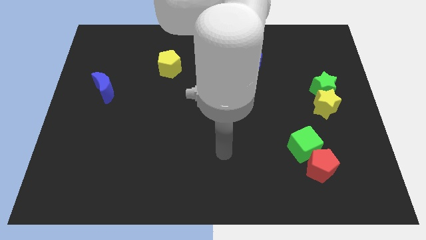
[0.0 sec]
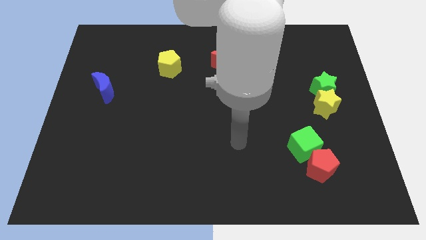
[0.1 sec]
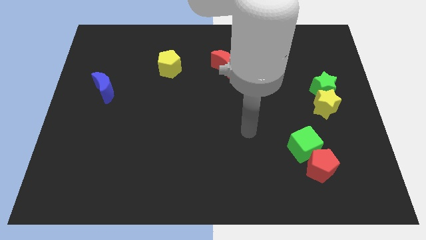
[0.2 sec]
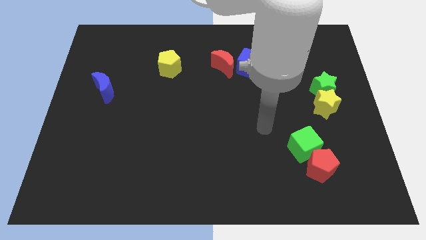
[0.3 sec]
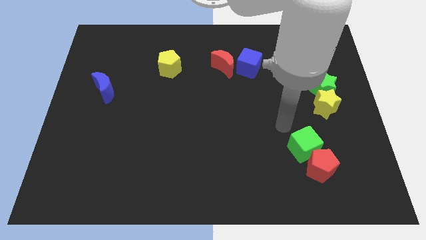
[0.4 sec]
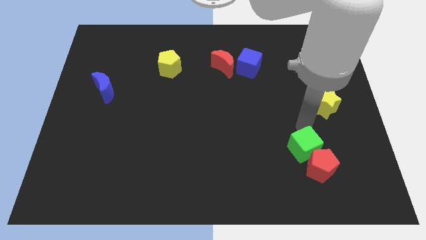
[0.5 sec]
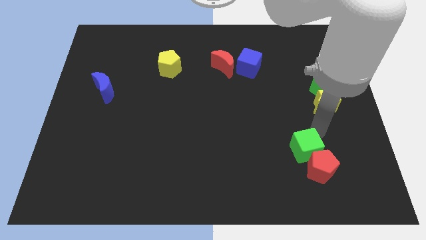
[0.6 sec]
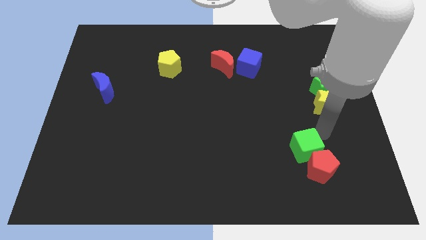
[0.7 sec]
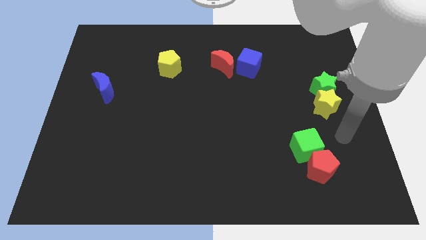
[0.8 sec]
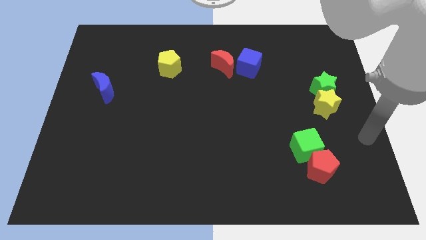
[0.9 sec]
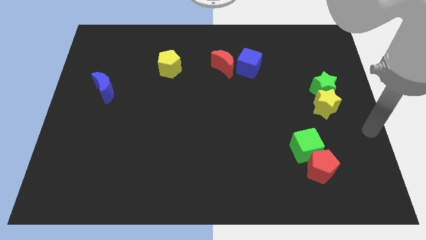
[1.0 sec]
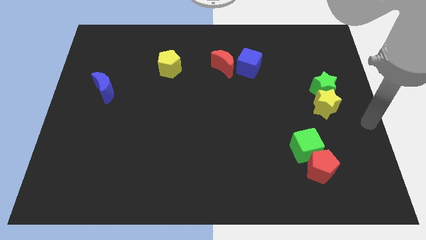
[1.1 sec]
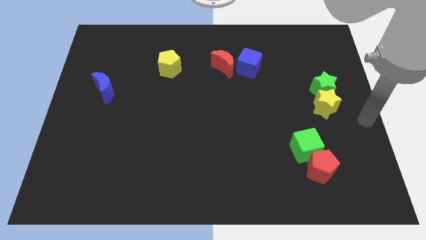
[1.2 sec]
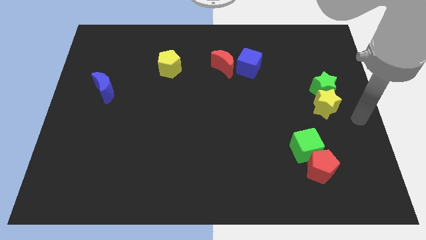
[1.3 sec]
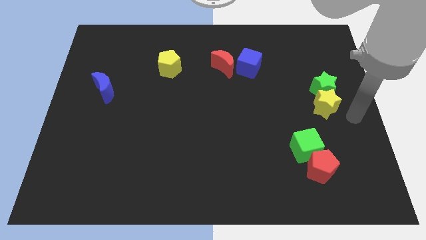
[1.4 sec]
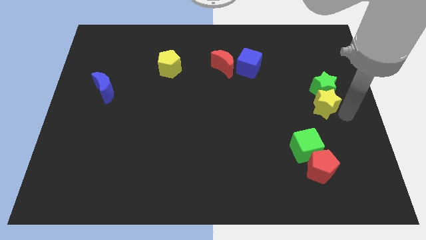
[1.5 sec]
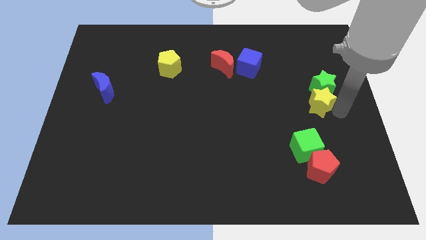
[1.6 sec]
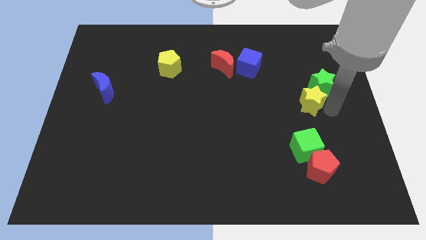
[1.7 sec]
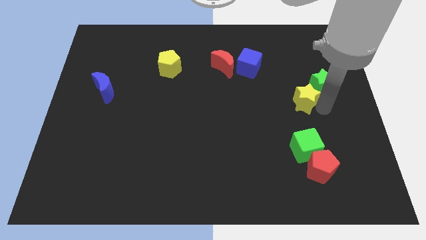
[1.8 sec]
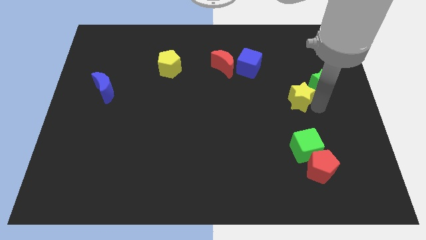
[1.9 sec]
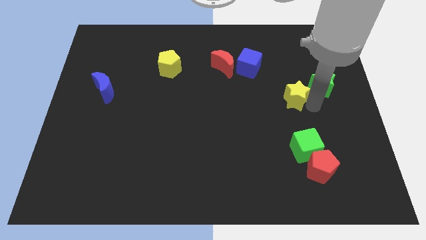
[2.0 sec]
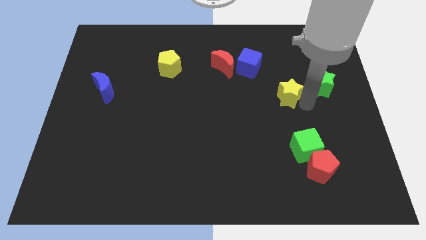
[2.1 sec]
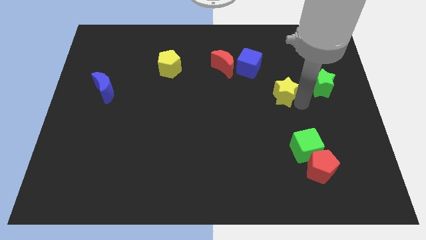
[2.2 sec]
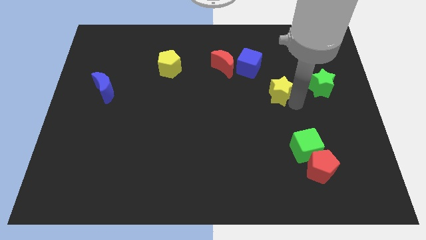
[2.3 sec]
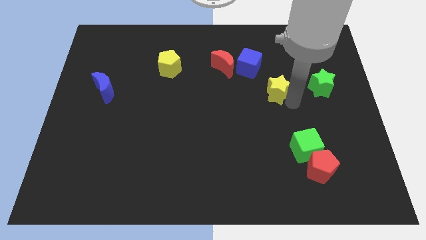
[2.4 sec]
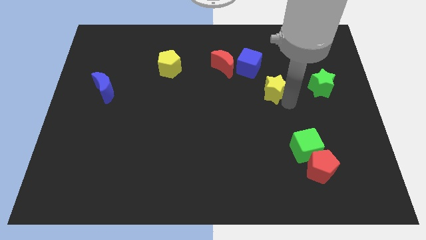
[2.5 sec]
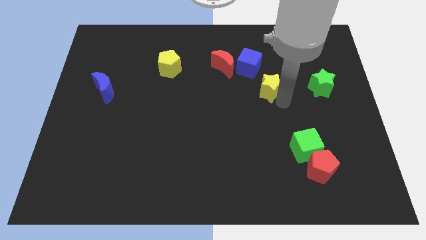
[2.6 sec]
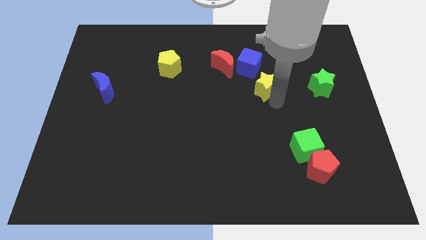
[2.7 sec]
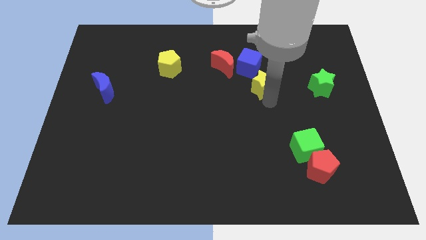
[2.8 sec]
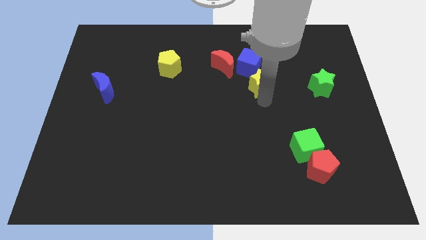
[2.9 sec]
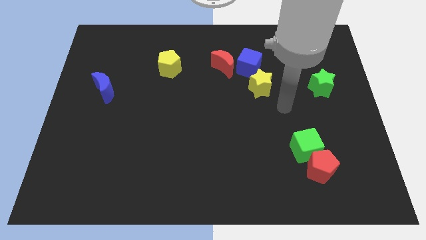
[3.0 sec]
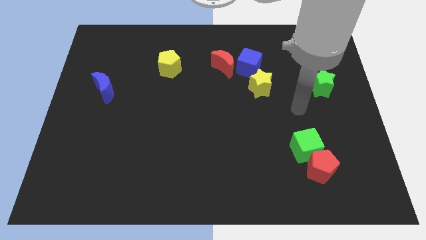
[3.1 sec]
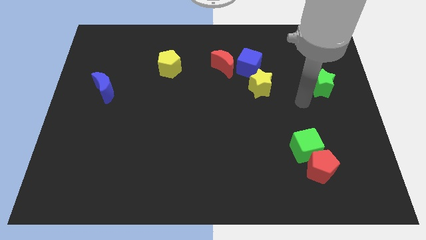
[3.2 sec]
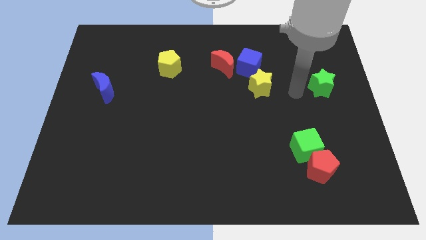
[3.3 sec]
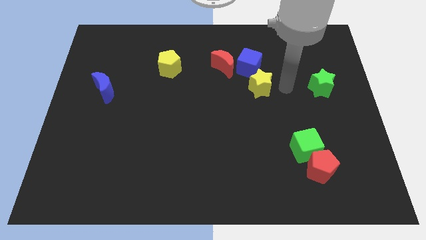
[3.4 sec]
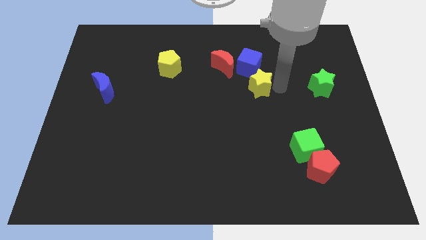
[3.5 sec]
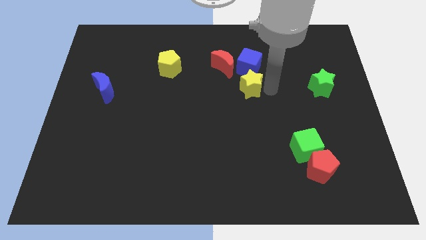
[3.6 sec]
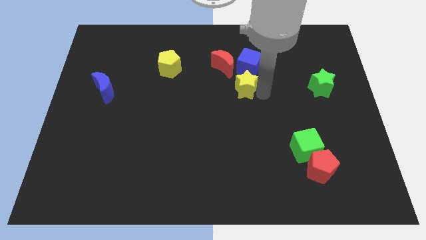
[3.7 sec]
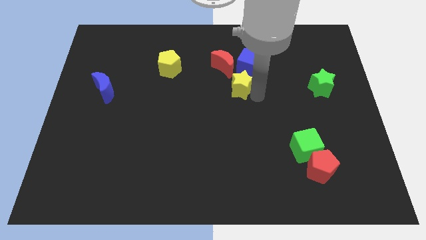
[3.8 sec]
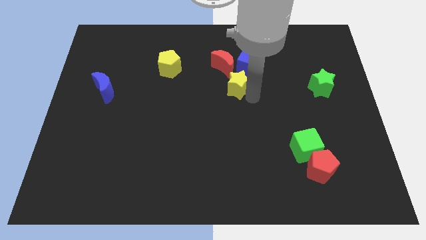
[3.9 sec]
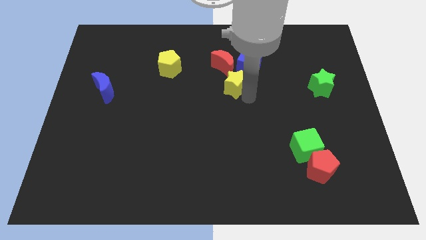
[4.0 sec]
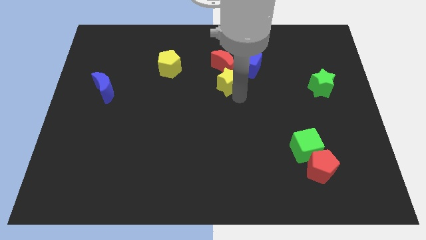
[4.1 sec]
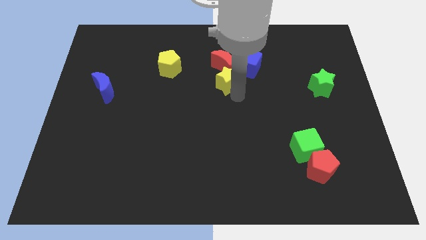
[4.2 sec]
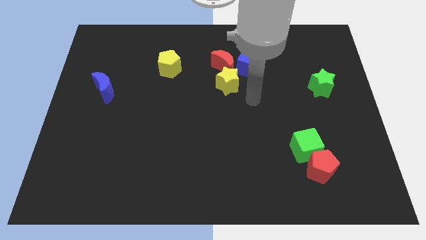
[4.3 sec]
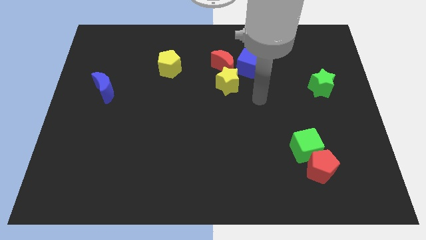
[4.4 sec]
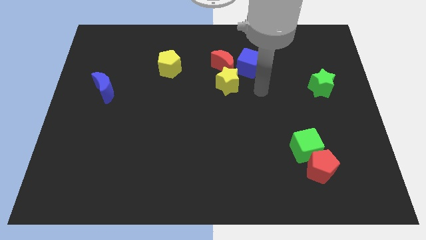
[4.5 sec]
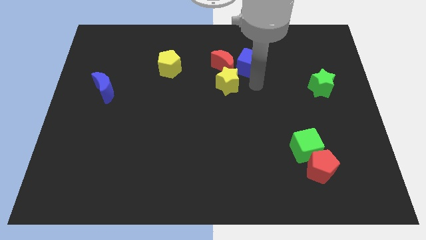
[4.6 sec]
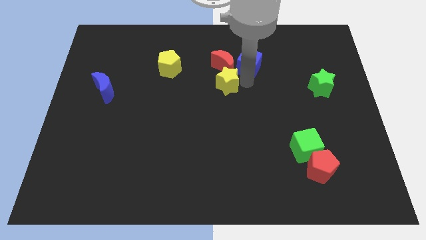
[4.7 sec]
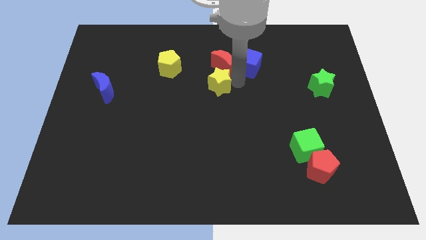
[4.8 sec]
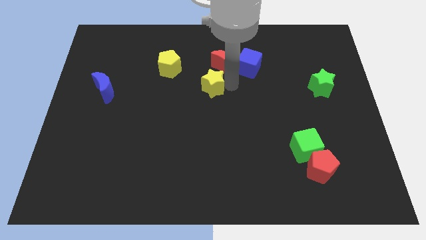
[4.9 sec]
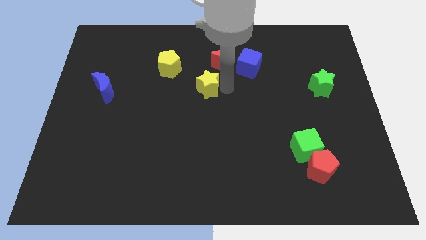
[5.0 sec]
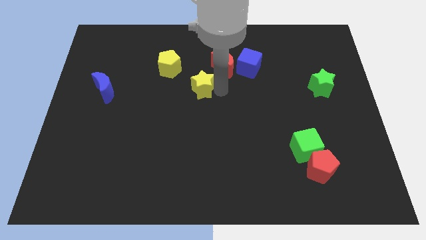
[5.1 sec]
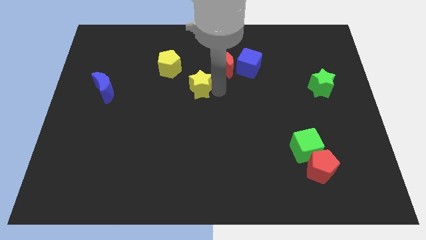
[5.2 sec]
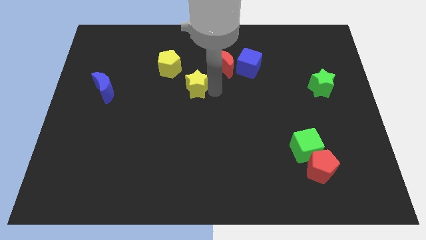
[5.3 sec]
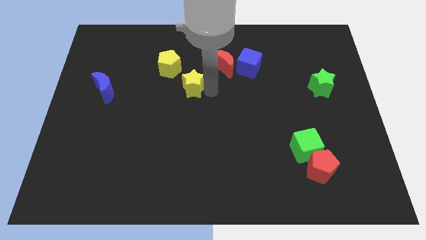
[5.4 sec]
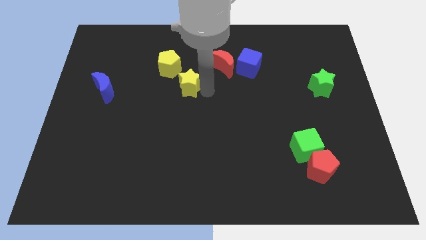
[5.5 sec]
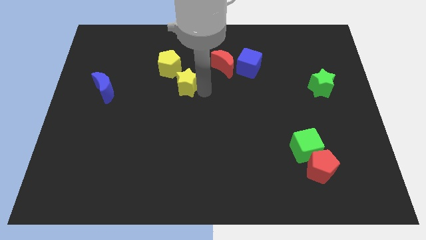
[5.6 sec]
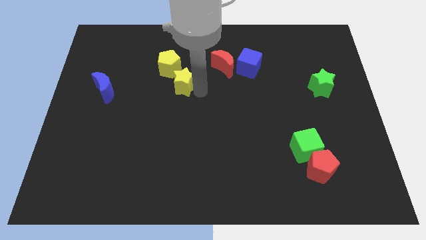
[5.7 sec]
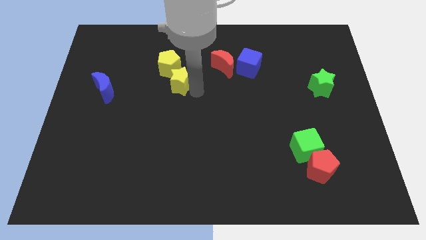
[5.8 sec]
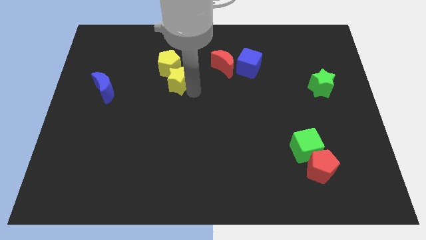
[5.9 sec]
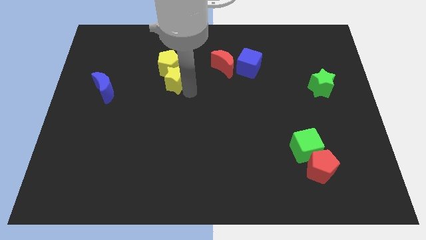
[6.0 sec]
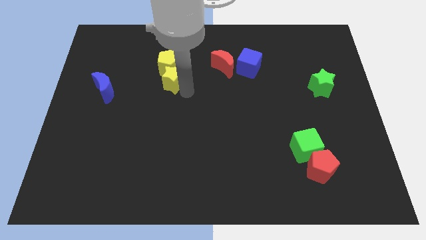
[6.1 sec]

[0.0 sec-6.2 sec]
push the yellow star close to the yellow pentagon

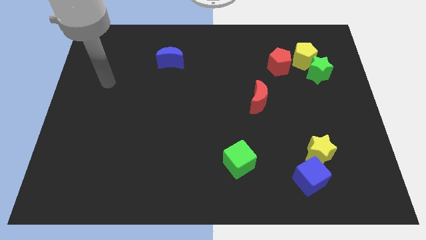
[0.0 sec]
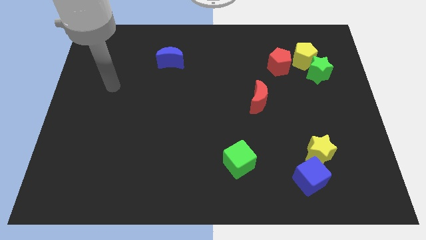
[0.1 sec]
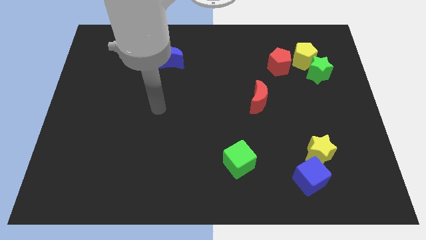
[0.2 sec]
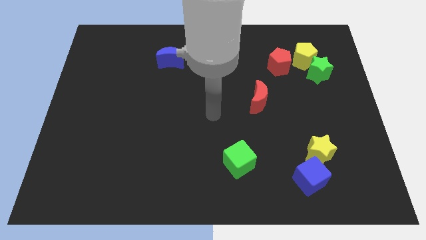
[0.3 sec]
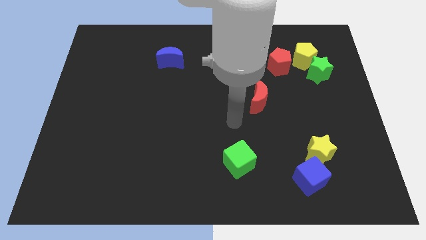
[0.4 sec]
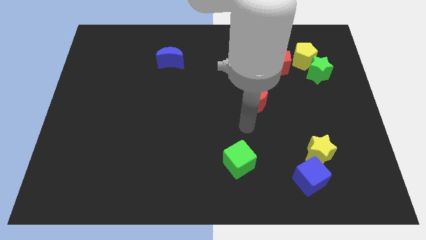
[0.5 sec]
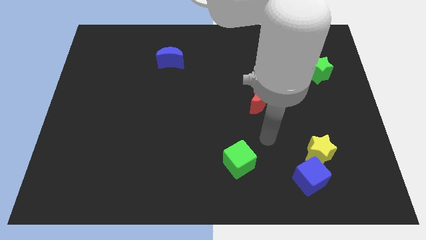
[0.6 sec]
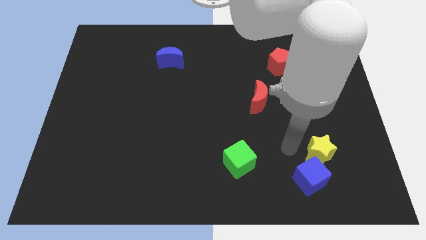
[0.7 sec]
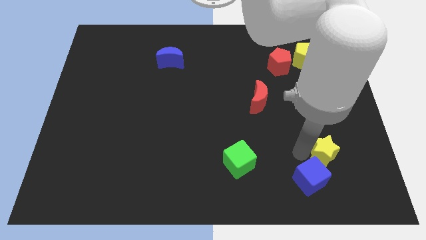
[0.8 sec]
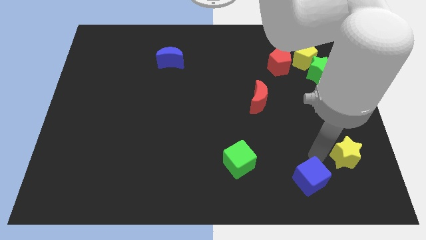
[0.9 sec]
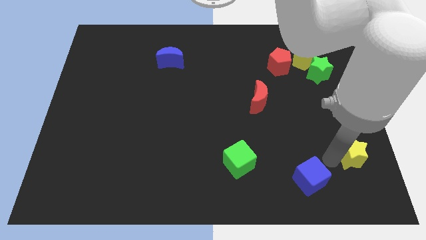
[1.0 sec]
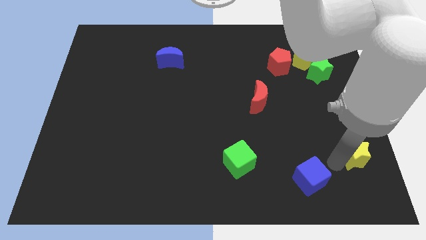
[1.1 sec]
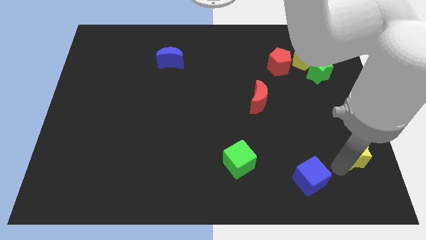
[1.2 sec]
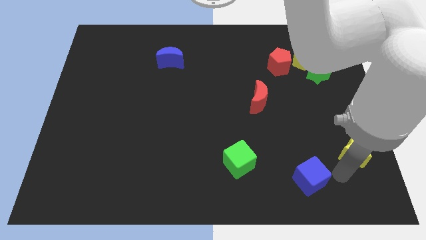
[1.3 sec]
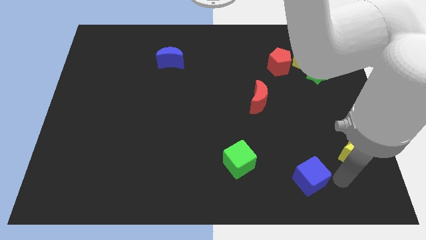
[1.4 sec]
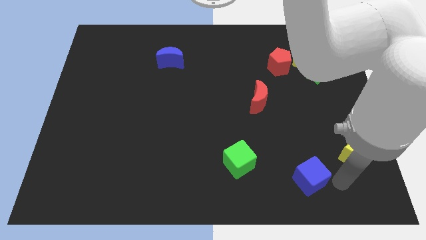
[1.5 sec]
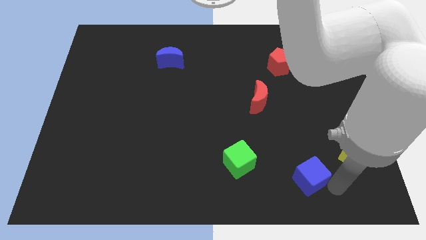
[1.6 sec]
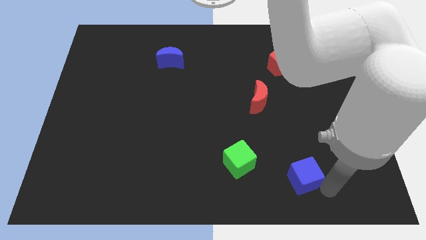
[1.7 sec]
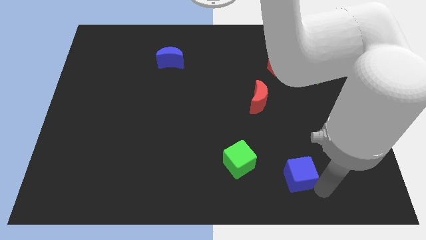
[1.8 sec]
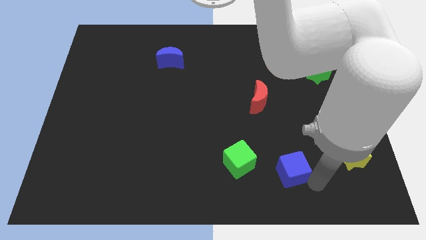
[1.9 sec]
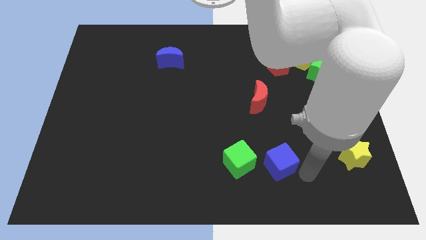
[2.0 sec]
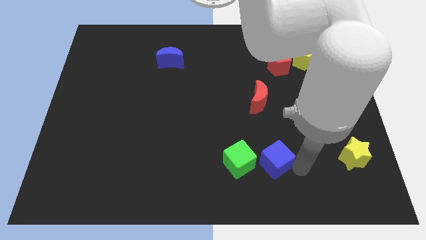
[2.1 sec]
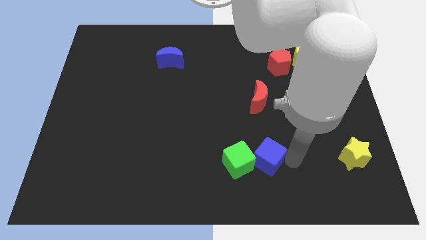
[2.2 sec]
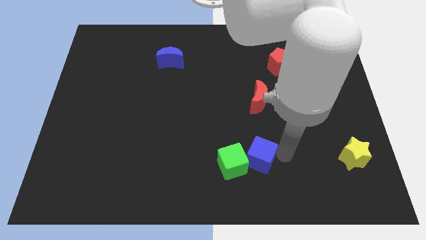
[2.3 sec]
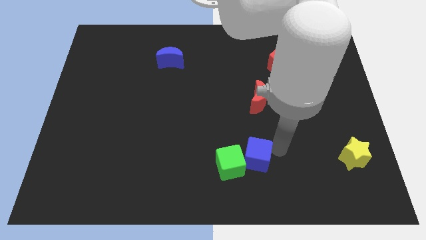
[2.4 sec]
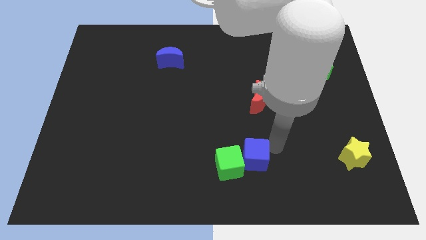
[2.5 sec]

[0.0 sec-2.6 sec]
push the blue cube to the green cube
